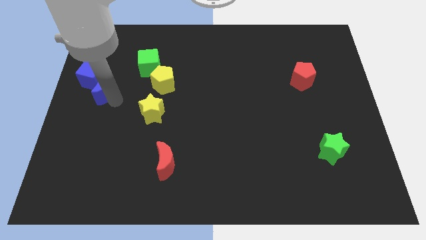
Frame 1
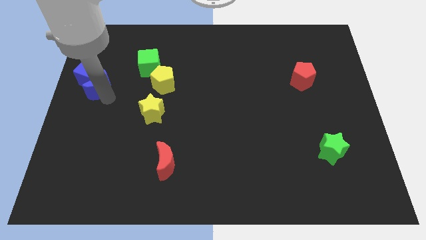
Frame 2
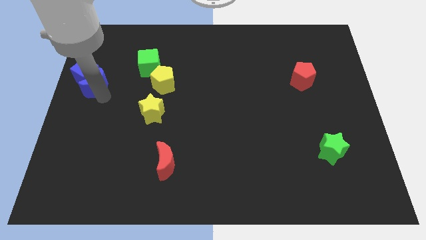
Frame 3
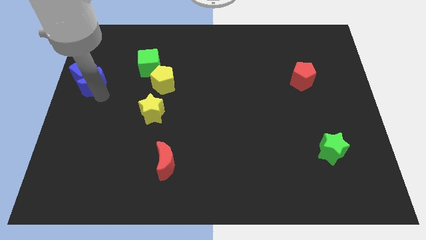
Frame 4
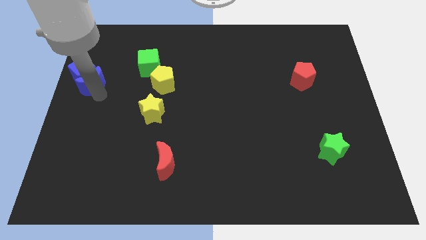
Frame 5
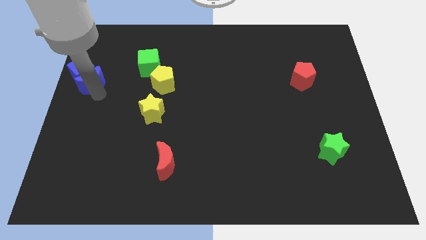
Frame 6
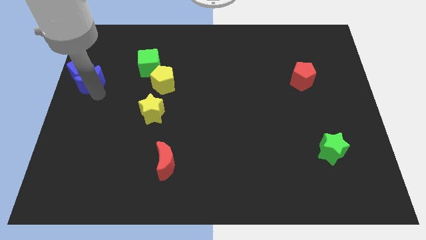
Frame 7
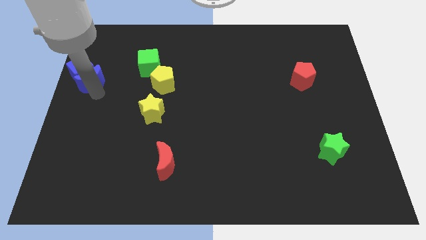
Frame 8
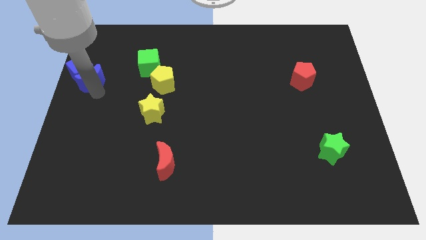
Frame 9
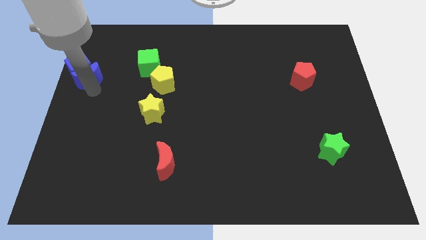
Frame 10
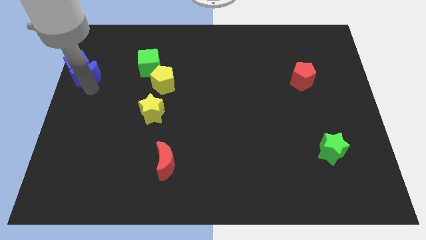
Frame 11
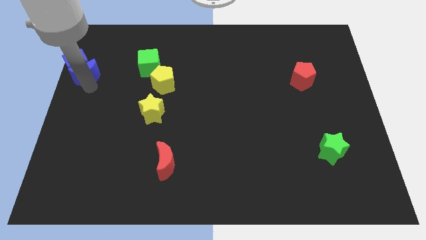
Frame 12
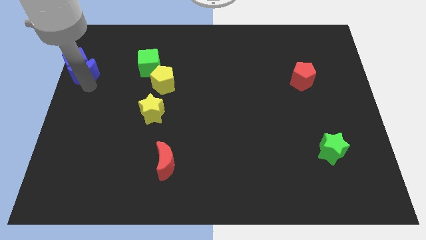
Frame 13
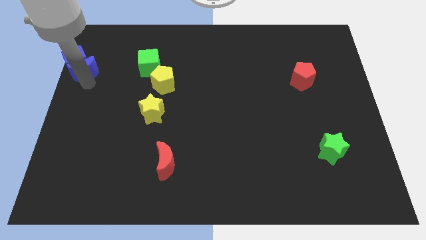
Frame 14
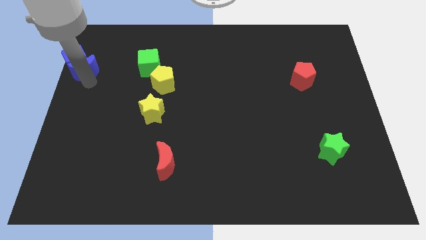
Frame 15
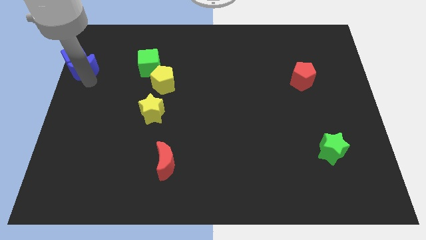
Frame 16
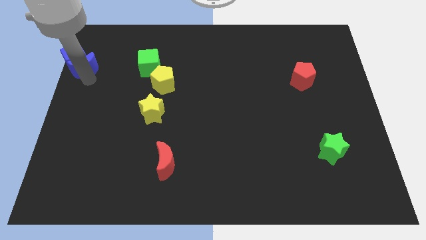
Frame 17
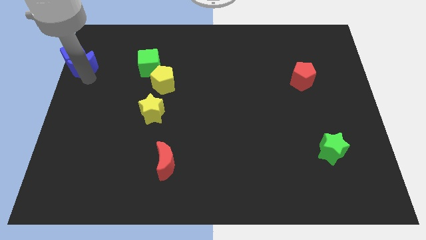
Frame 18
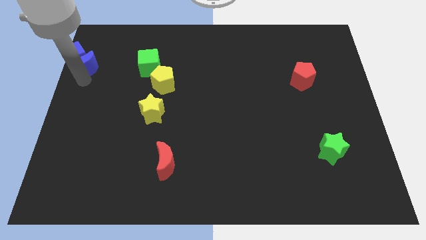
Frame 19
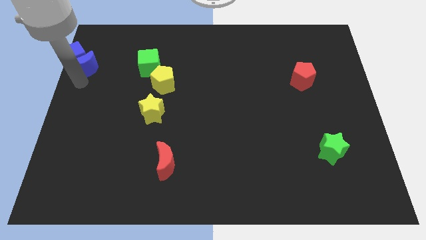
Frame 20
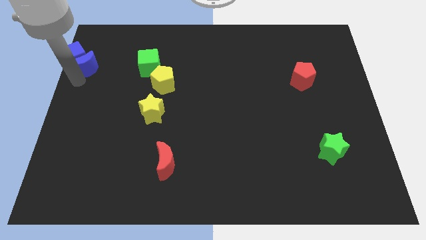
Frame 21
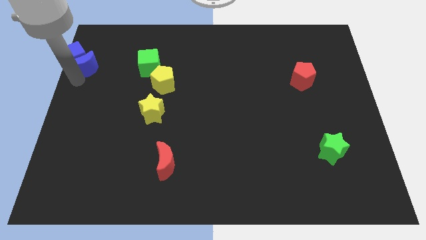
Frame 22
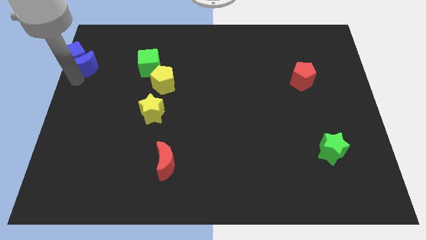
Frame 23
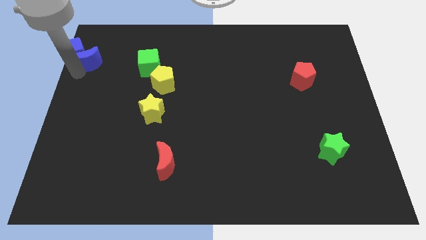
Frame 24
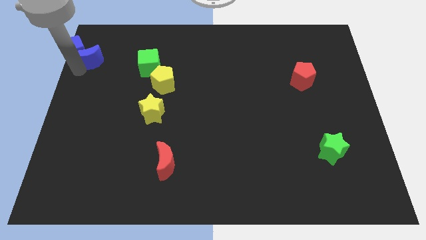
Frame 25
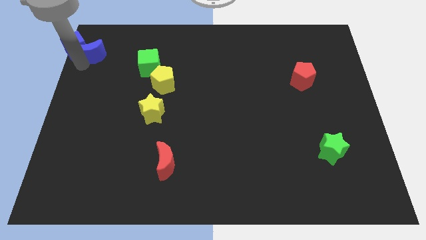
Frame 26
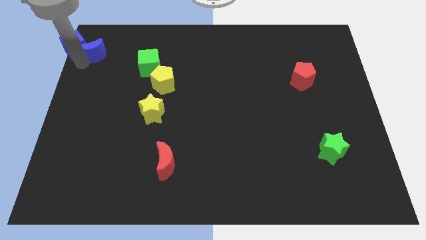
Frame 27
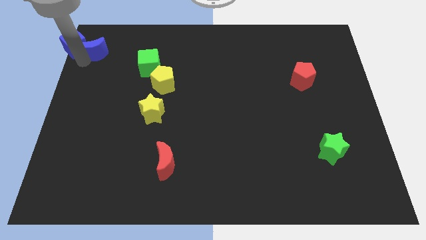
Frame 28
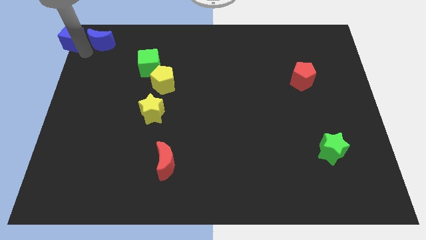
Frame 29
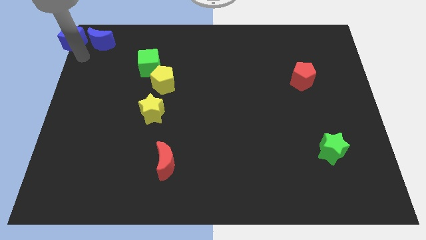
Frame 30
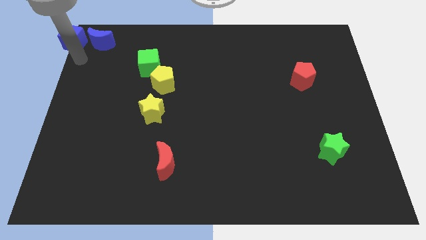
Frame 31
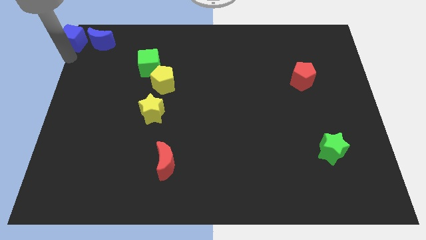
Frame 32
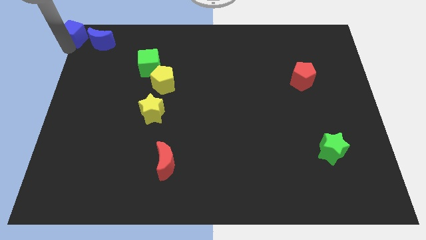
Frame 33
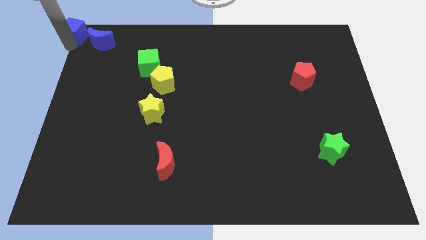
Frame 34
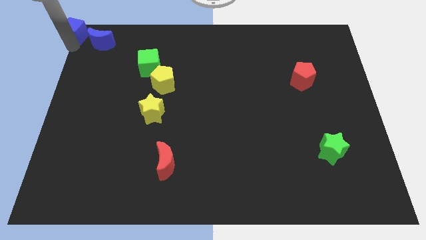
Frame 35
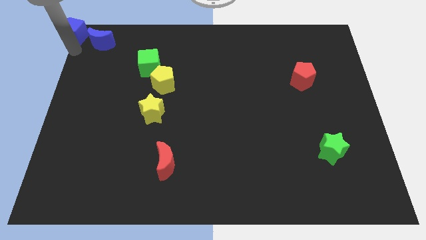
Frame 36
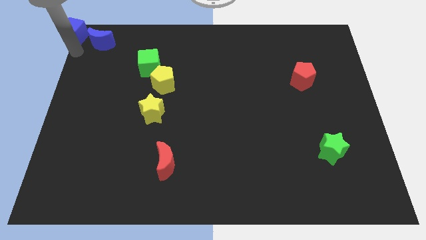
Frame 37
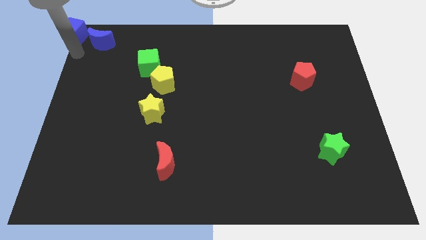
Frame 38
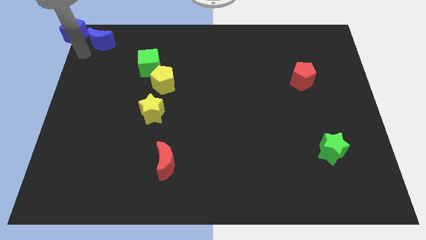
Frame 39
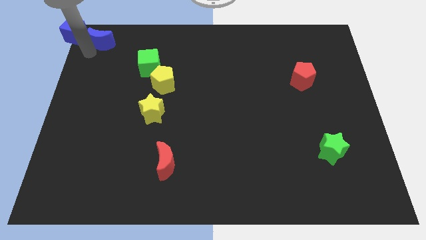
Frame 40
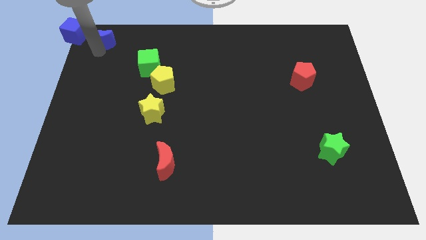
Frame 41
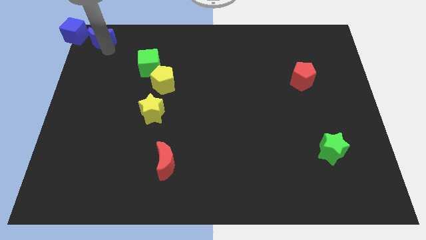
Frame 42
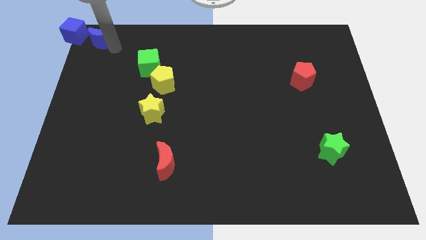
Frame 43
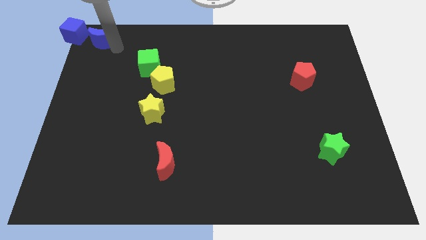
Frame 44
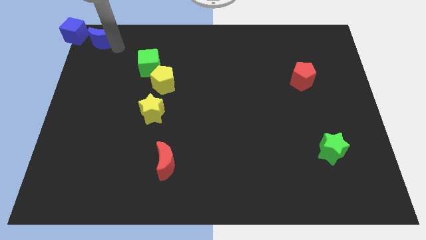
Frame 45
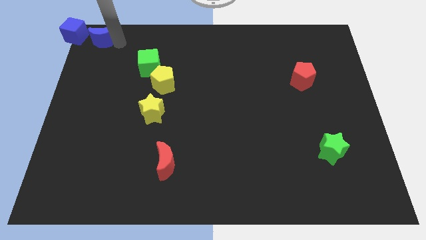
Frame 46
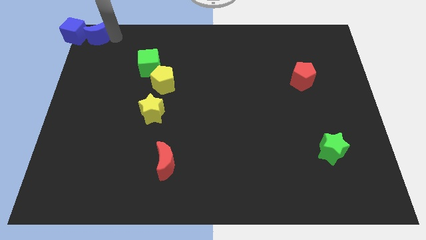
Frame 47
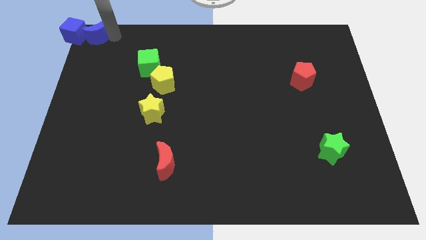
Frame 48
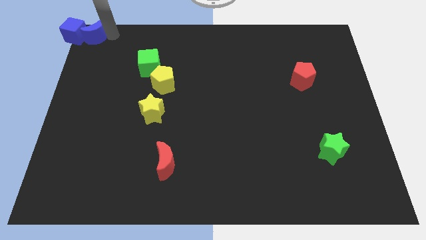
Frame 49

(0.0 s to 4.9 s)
push the blue cube with the blue crescent towards the top left of the board

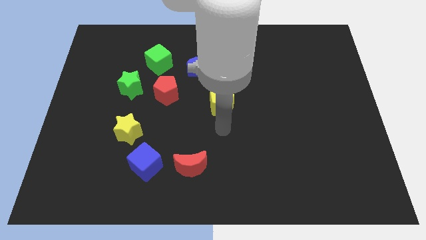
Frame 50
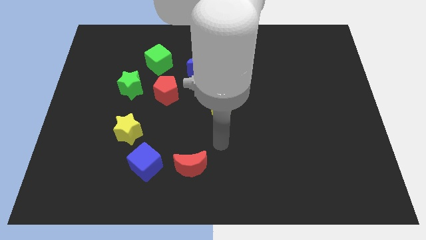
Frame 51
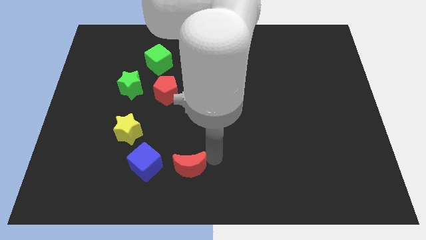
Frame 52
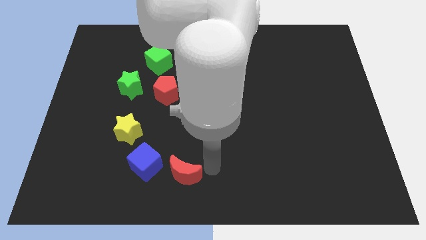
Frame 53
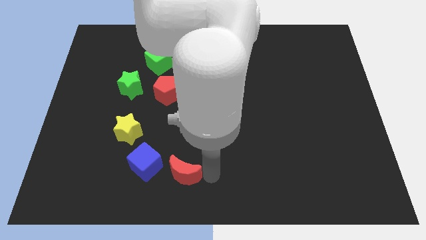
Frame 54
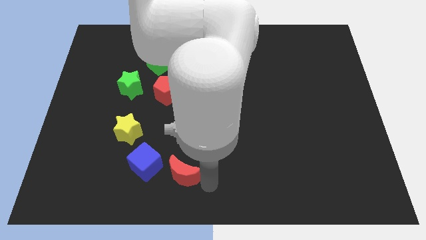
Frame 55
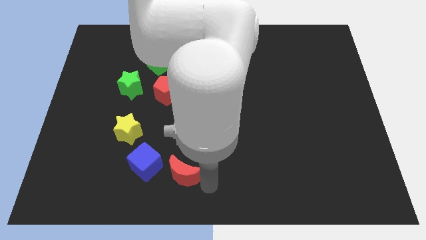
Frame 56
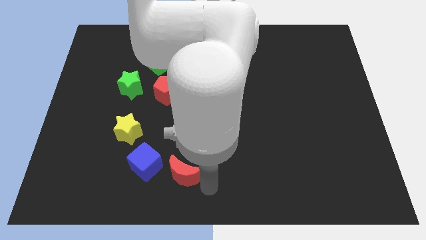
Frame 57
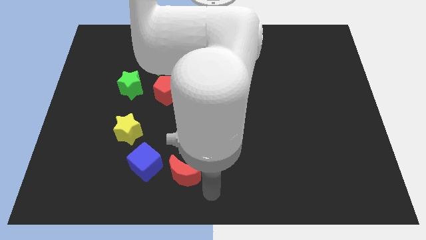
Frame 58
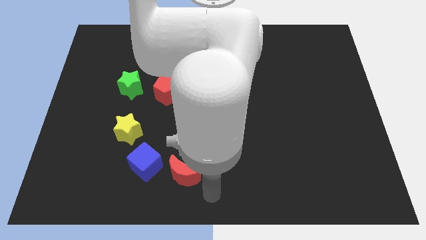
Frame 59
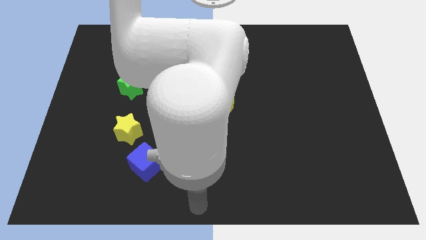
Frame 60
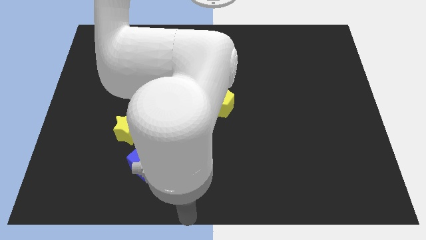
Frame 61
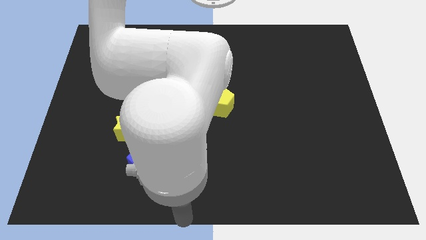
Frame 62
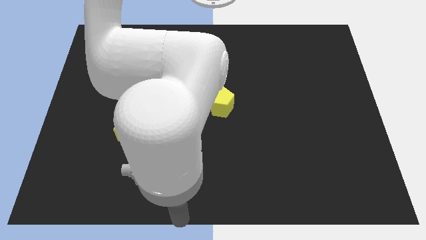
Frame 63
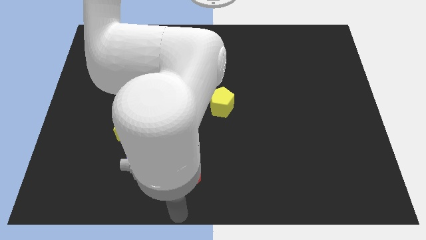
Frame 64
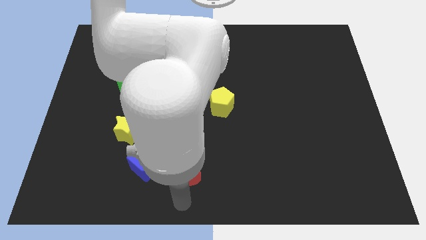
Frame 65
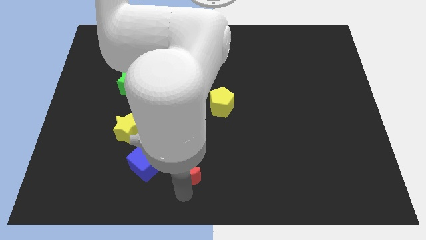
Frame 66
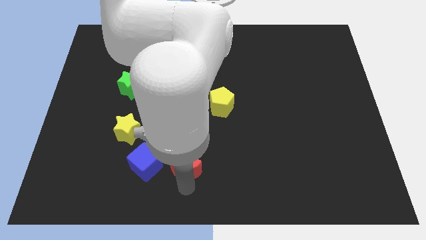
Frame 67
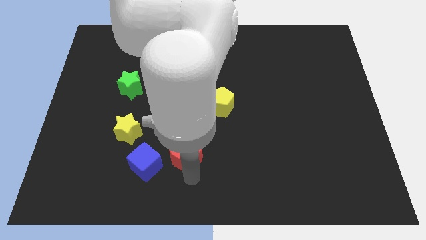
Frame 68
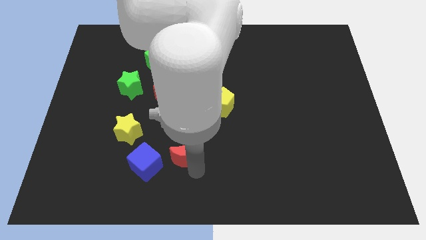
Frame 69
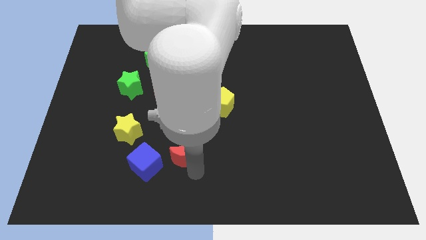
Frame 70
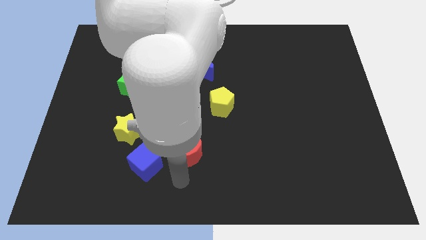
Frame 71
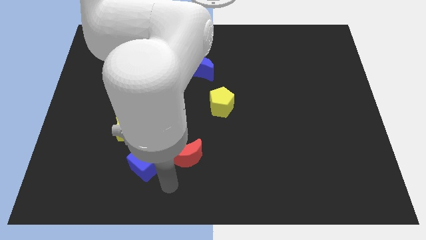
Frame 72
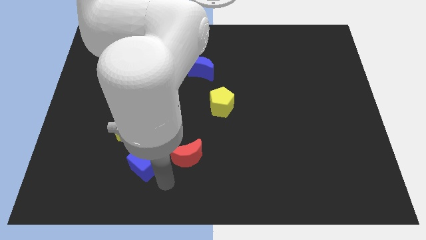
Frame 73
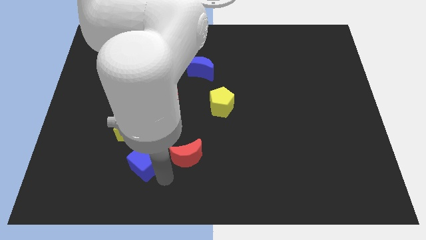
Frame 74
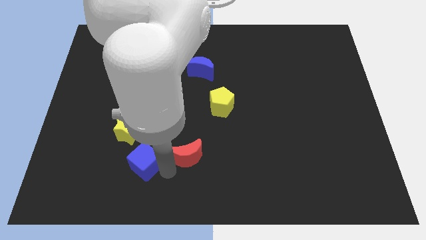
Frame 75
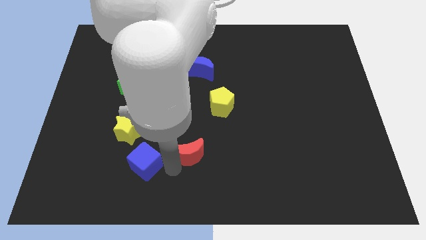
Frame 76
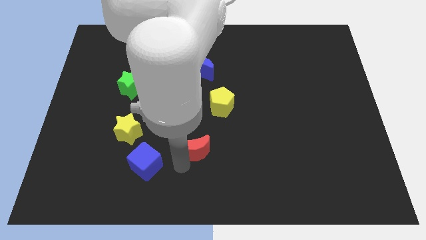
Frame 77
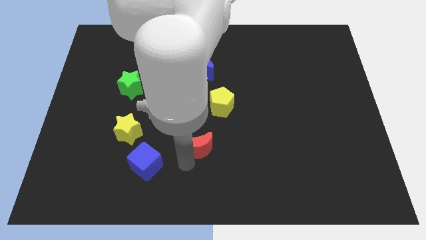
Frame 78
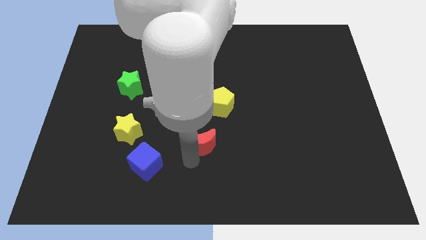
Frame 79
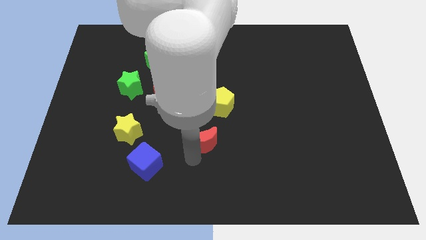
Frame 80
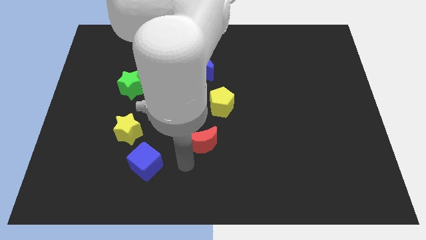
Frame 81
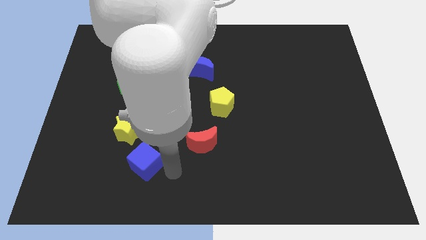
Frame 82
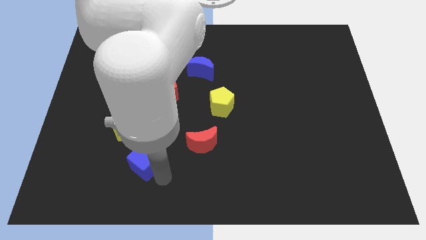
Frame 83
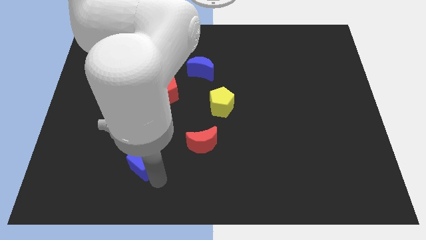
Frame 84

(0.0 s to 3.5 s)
slightly move the red crescent away from the blue cube

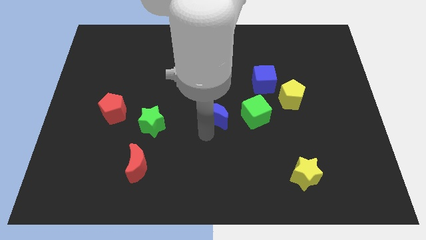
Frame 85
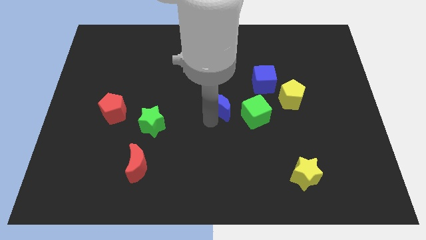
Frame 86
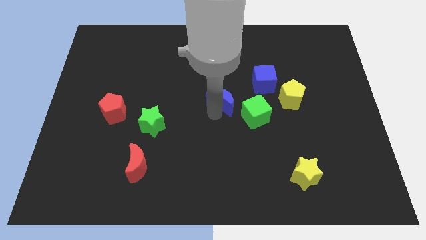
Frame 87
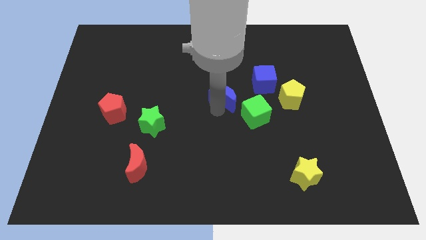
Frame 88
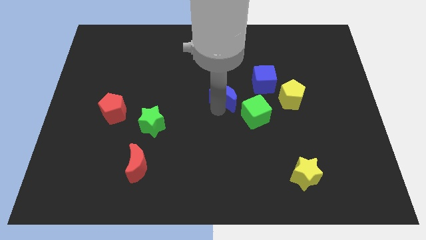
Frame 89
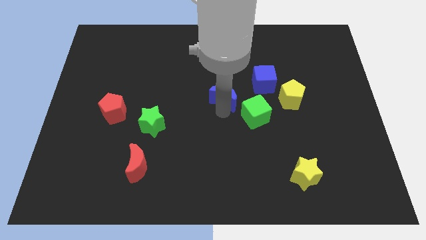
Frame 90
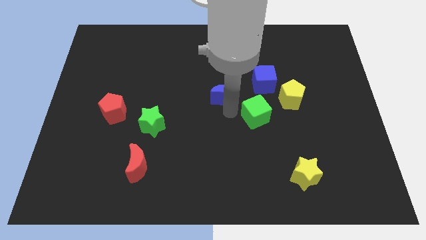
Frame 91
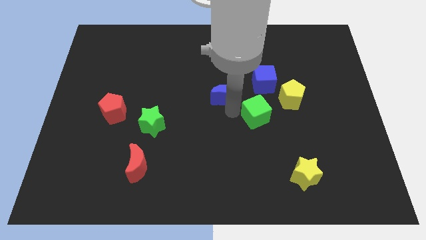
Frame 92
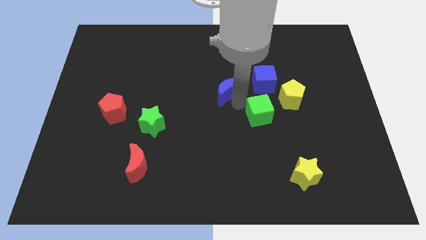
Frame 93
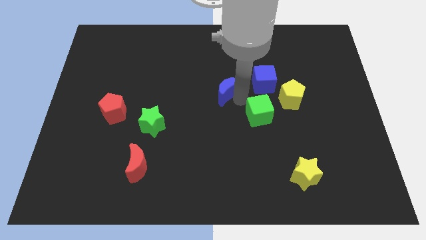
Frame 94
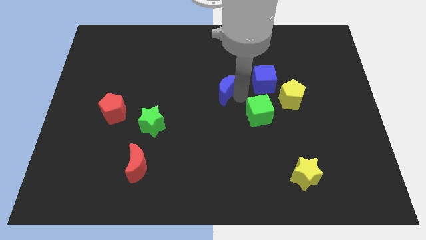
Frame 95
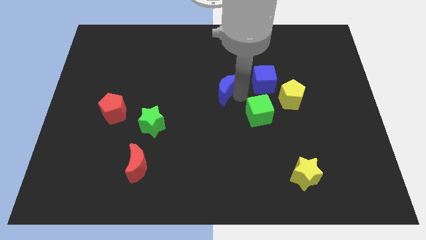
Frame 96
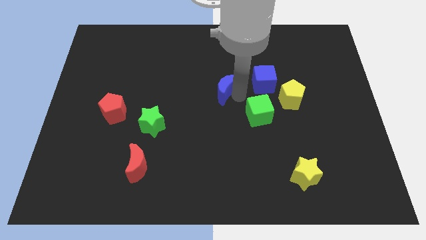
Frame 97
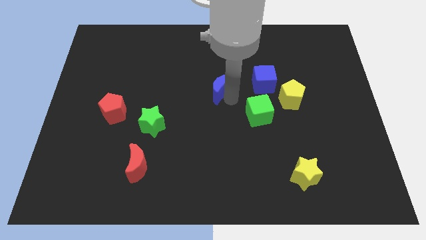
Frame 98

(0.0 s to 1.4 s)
move the blue moon diagonally top left to the green cube
